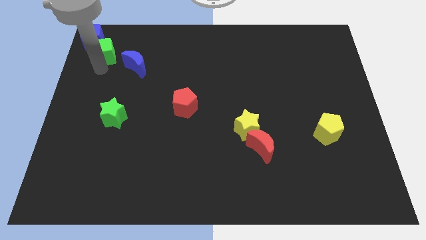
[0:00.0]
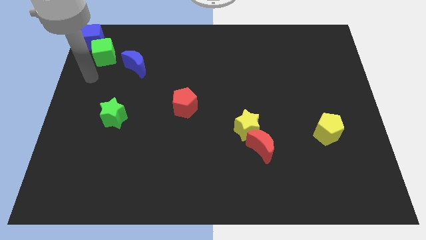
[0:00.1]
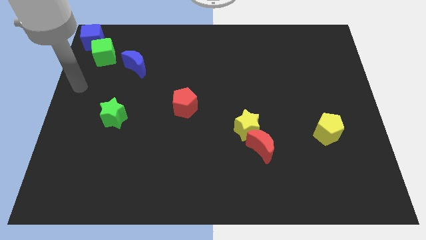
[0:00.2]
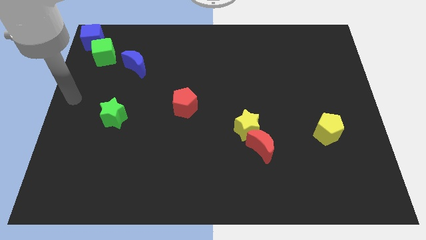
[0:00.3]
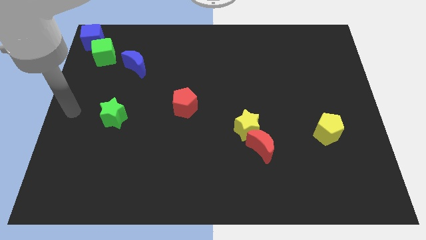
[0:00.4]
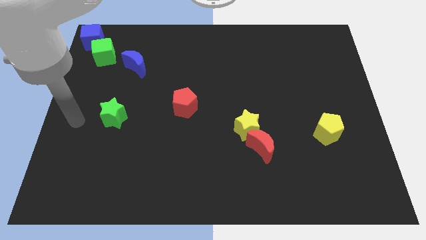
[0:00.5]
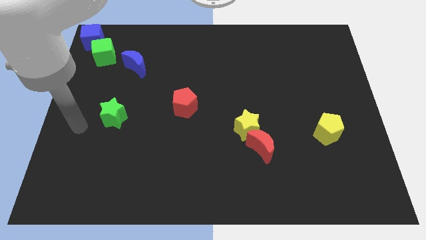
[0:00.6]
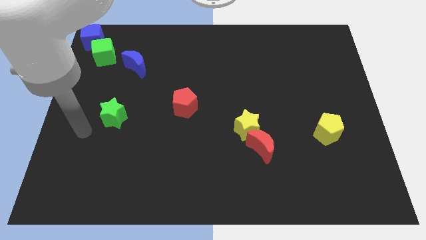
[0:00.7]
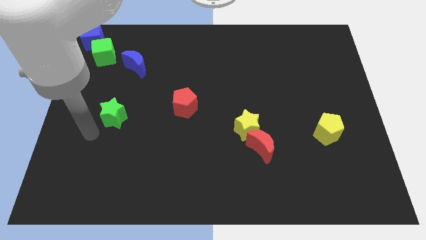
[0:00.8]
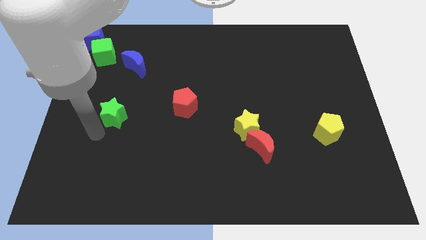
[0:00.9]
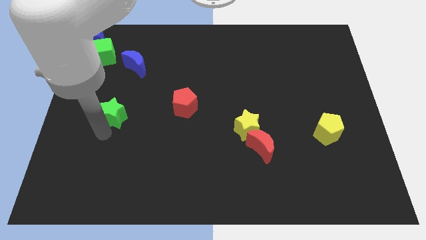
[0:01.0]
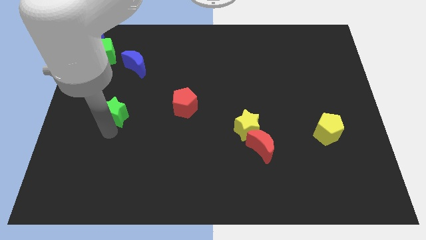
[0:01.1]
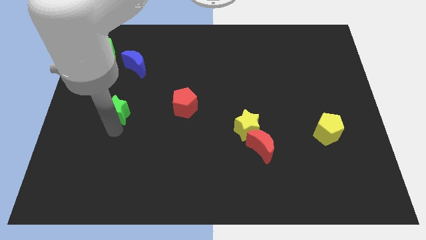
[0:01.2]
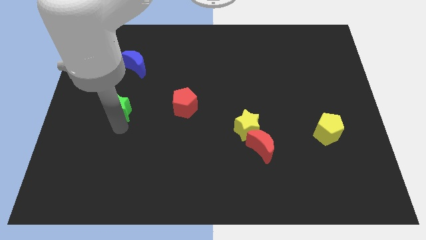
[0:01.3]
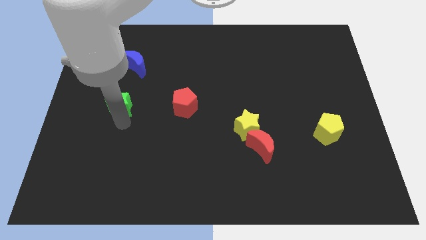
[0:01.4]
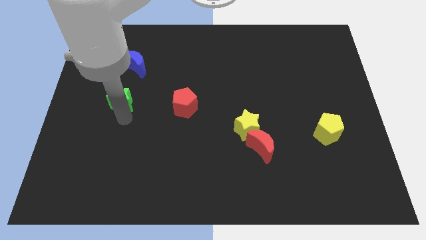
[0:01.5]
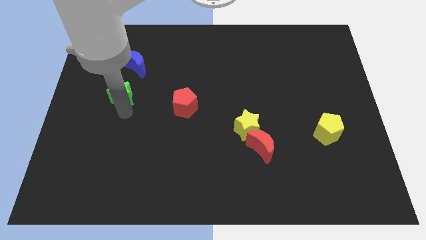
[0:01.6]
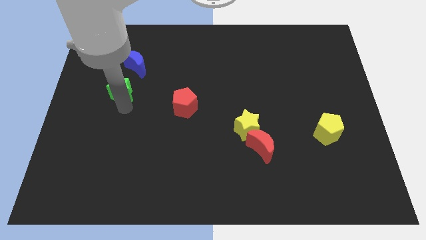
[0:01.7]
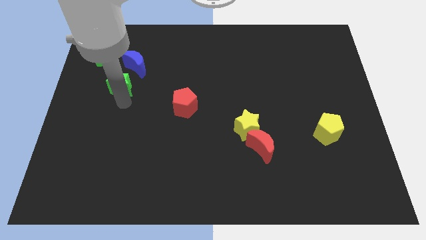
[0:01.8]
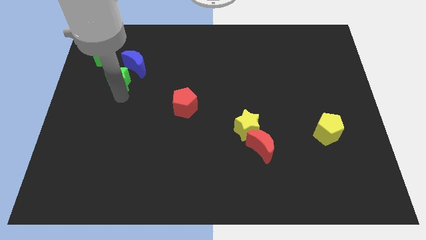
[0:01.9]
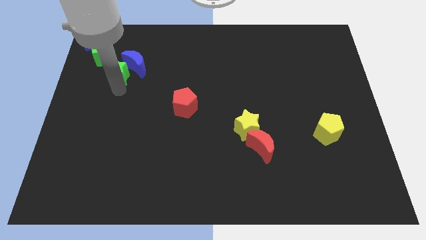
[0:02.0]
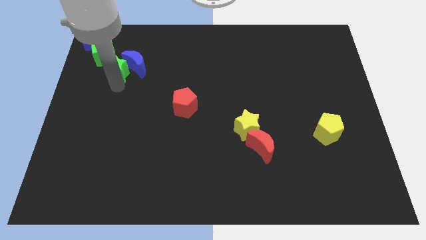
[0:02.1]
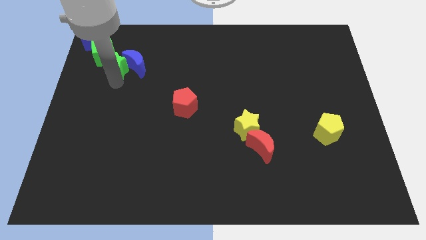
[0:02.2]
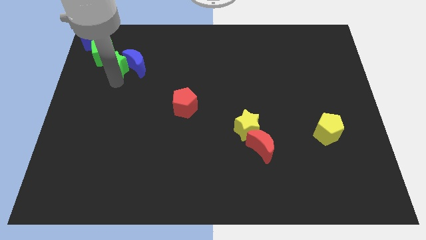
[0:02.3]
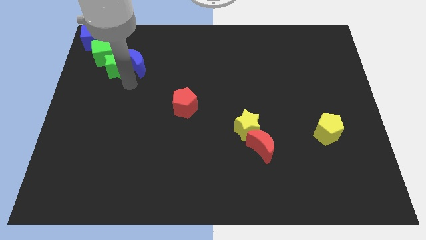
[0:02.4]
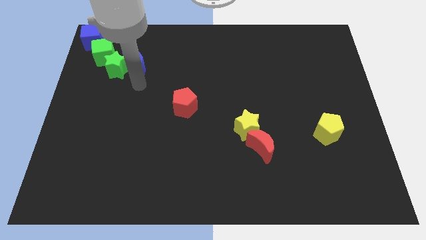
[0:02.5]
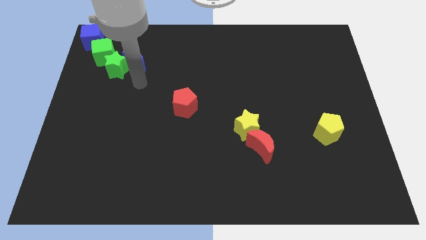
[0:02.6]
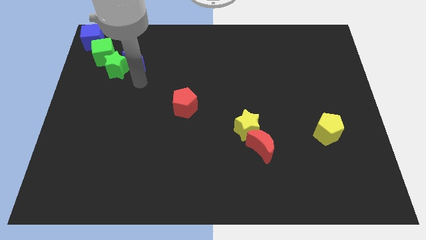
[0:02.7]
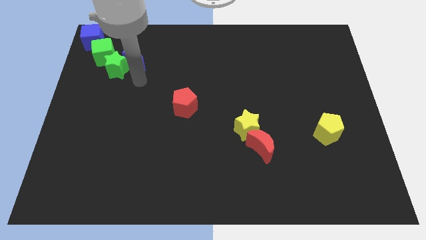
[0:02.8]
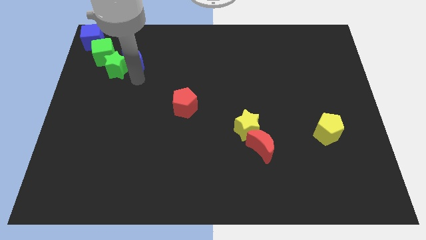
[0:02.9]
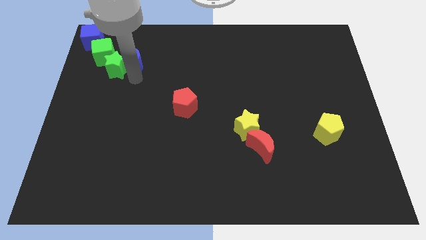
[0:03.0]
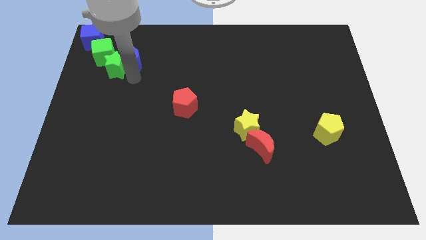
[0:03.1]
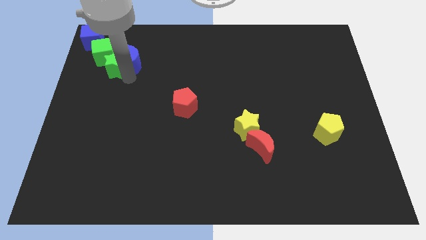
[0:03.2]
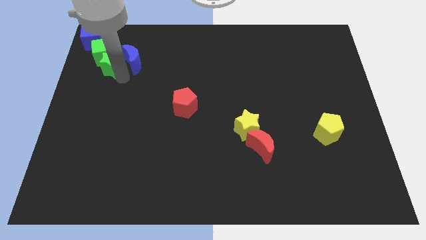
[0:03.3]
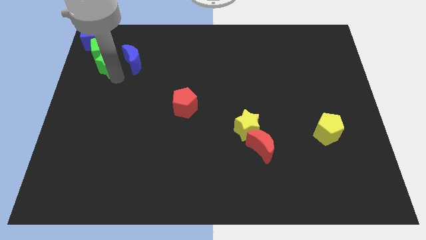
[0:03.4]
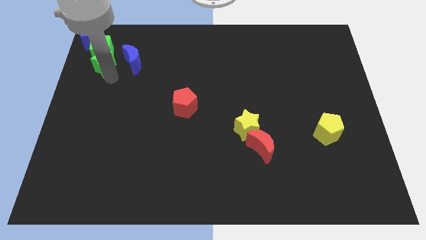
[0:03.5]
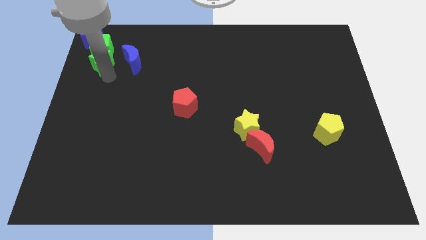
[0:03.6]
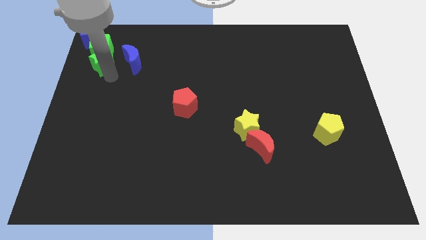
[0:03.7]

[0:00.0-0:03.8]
move the green star into the green cube

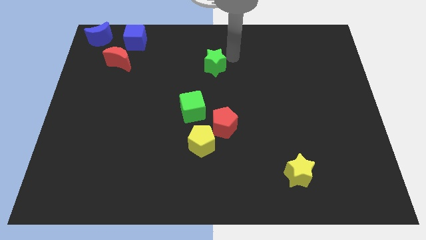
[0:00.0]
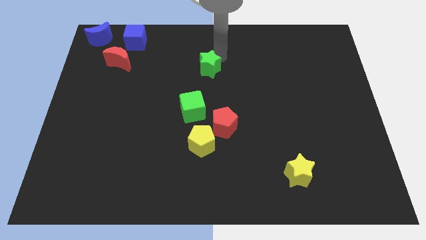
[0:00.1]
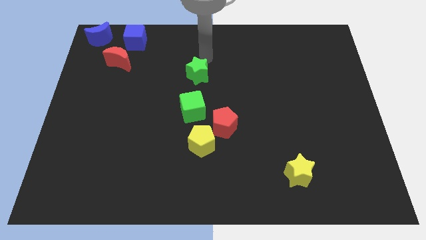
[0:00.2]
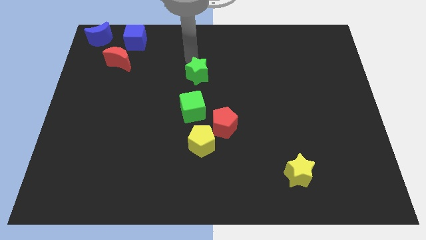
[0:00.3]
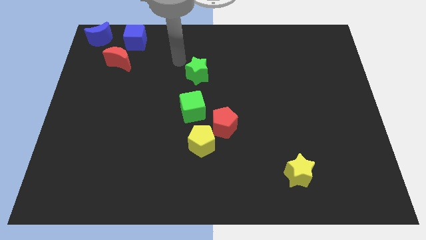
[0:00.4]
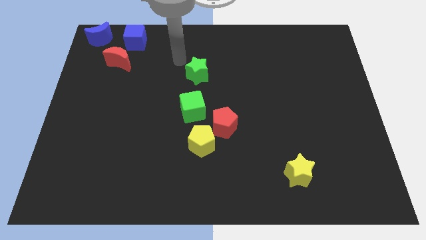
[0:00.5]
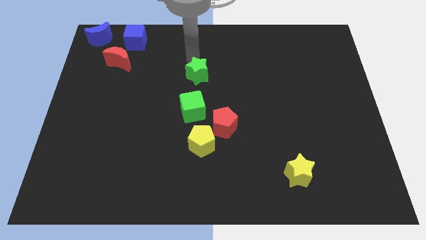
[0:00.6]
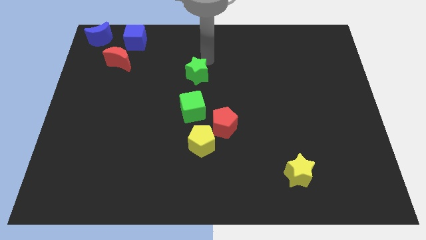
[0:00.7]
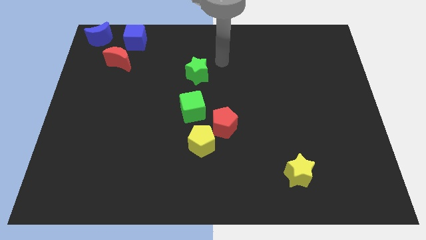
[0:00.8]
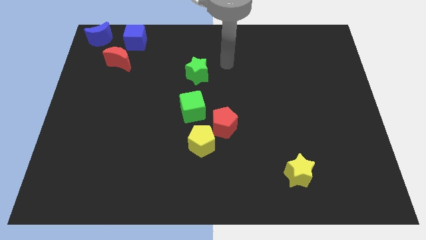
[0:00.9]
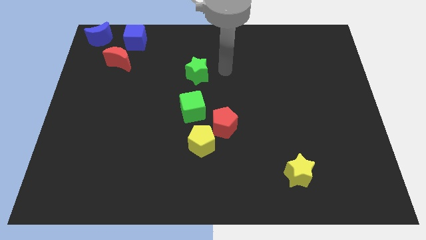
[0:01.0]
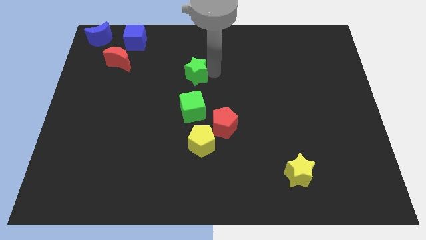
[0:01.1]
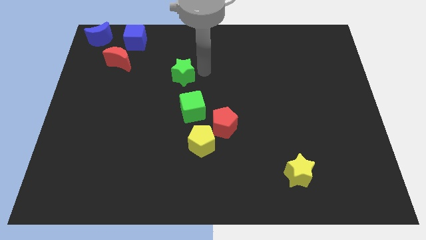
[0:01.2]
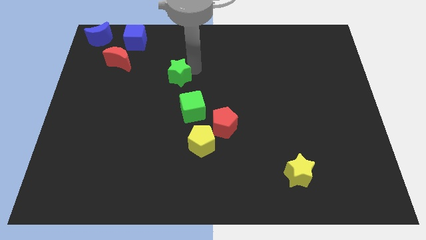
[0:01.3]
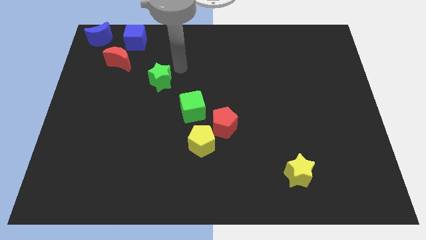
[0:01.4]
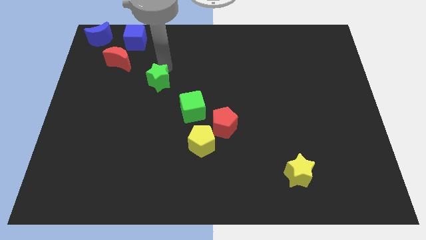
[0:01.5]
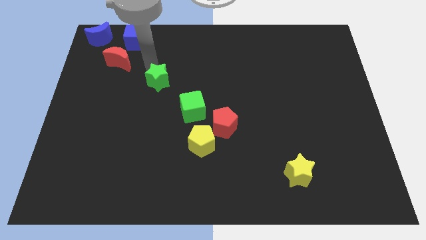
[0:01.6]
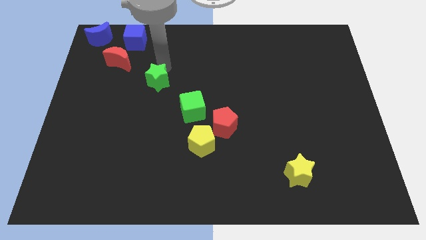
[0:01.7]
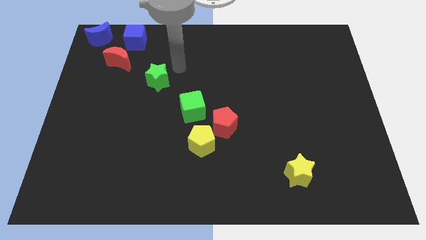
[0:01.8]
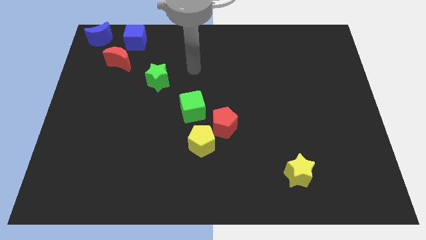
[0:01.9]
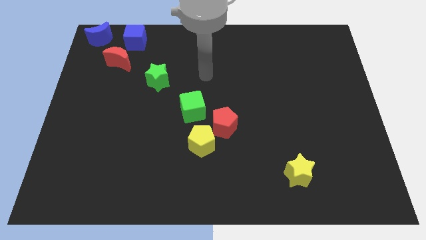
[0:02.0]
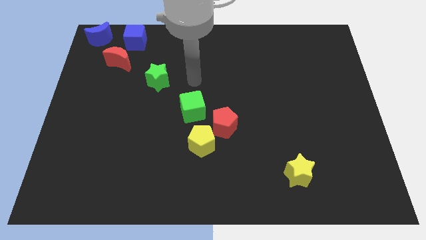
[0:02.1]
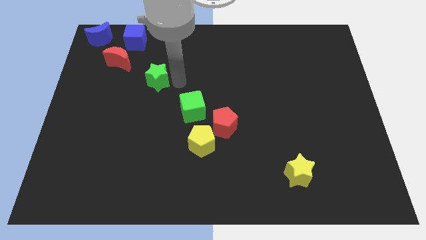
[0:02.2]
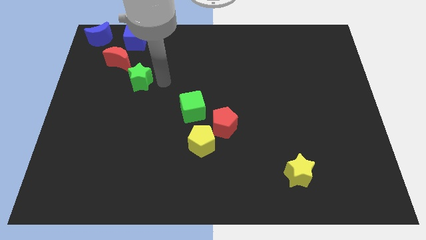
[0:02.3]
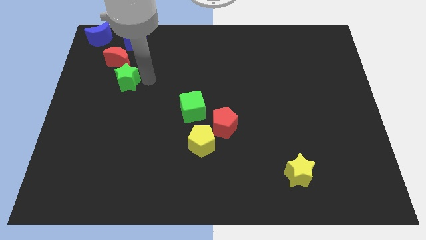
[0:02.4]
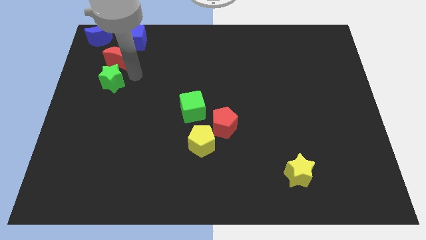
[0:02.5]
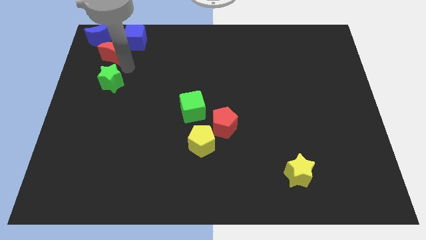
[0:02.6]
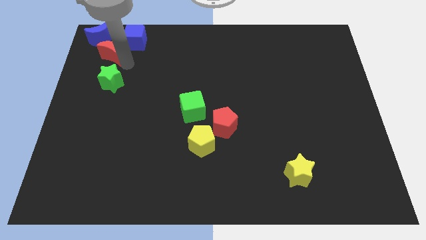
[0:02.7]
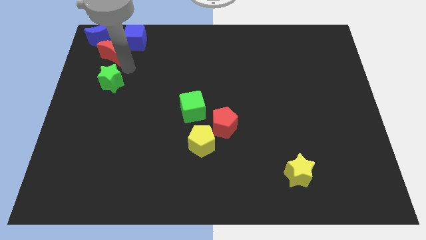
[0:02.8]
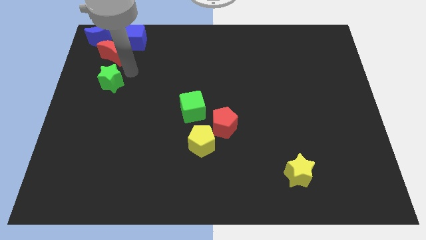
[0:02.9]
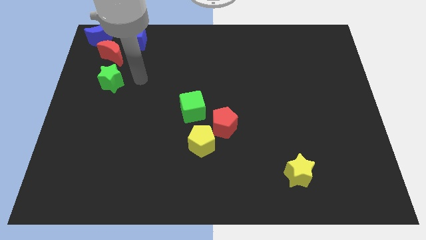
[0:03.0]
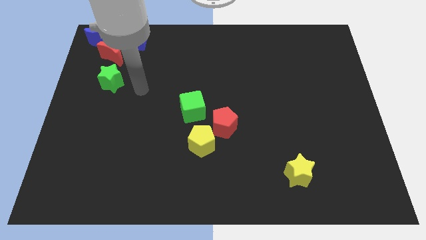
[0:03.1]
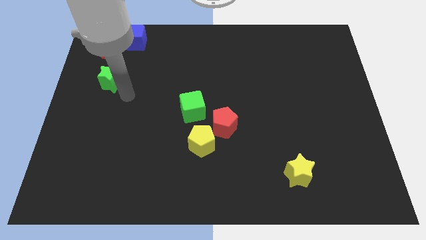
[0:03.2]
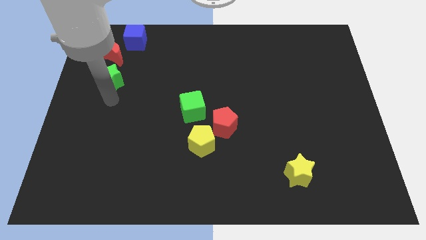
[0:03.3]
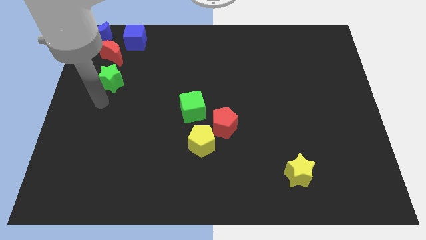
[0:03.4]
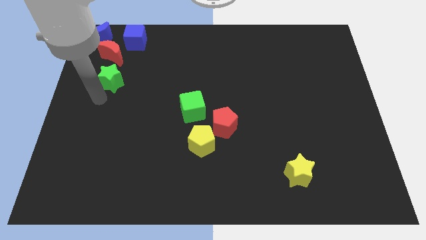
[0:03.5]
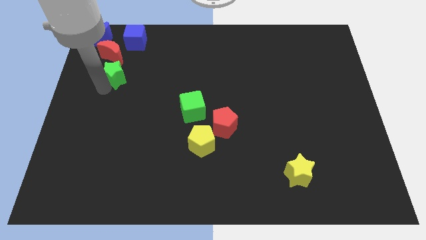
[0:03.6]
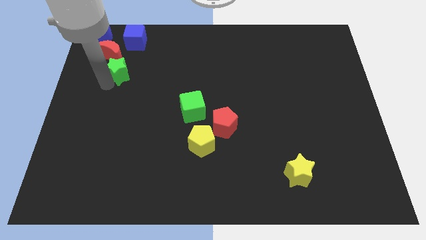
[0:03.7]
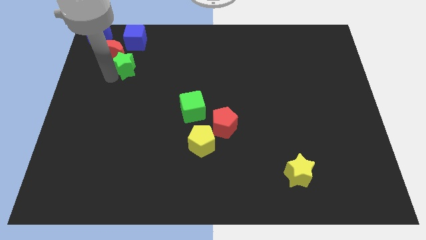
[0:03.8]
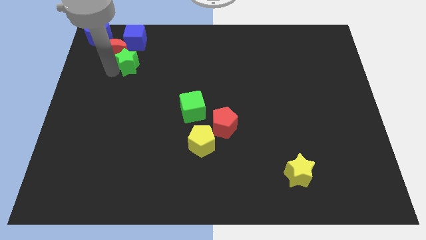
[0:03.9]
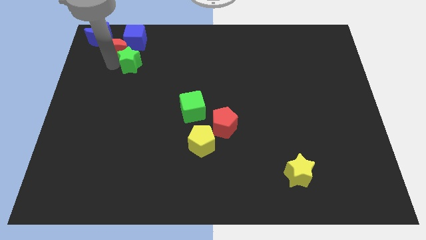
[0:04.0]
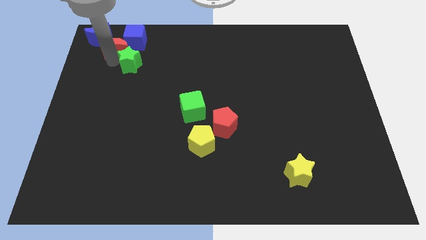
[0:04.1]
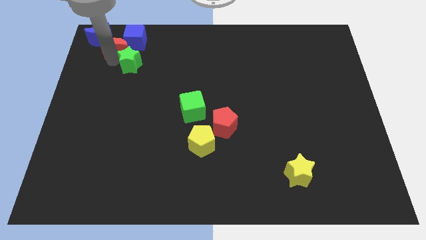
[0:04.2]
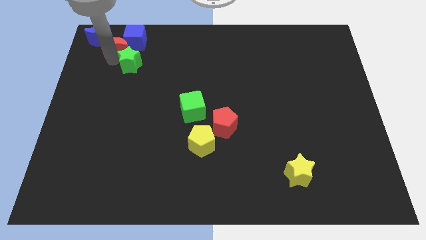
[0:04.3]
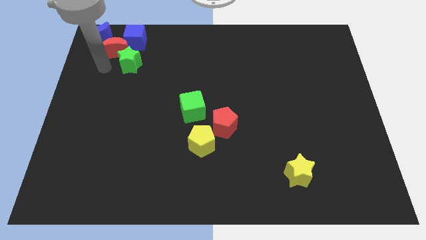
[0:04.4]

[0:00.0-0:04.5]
move the green star and red crescent to the blue blocks

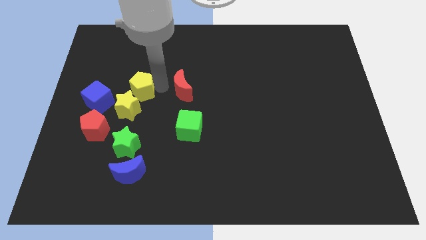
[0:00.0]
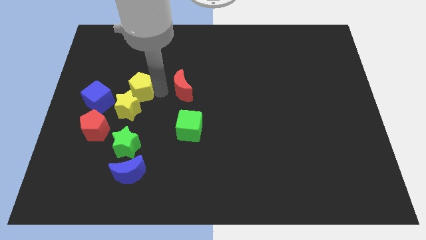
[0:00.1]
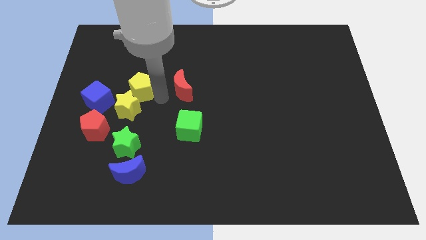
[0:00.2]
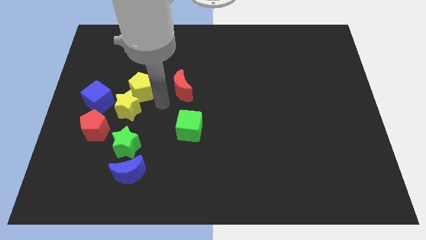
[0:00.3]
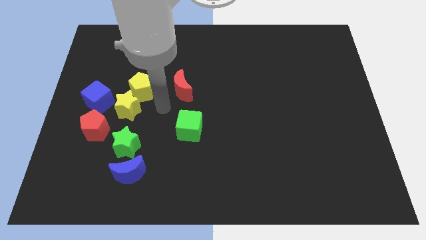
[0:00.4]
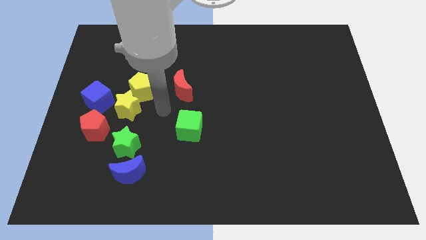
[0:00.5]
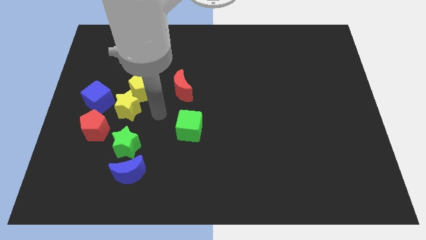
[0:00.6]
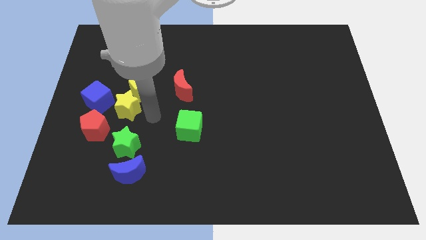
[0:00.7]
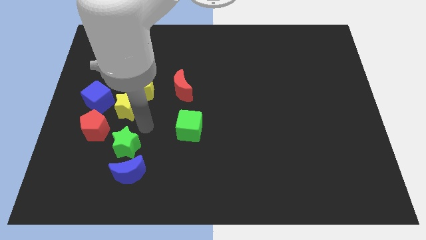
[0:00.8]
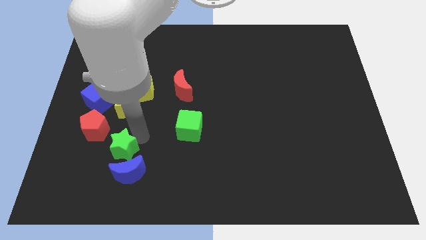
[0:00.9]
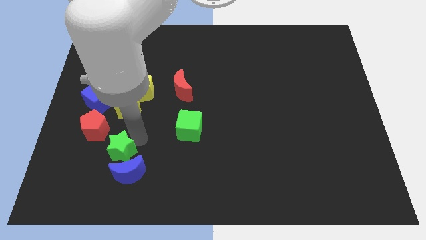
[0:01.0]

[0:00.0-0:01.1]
move your arm in between yellow pentagon and green cube
